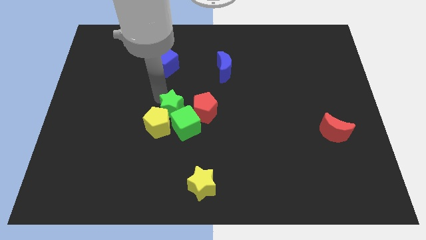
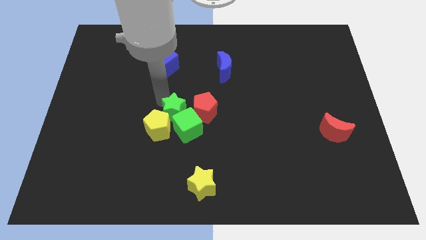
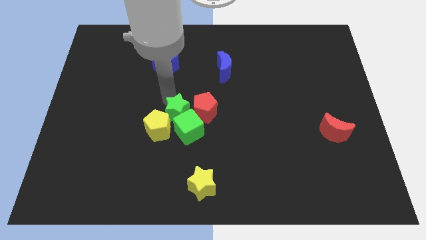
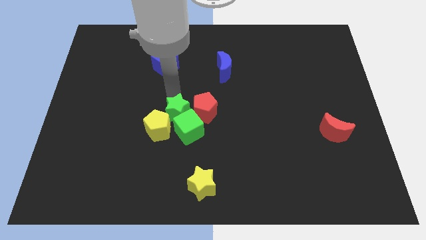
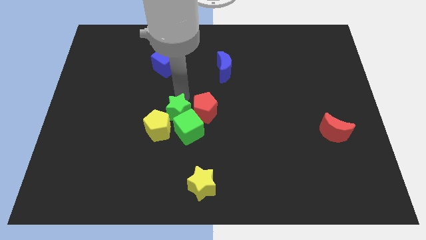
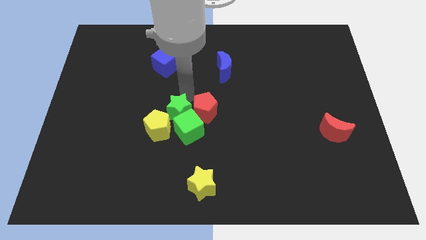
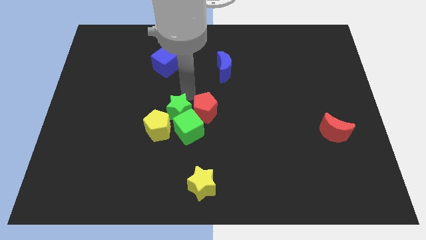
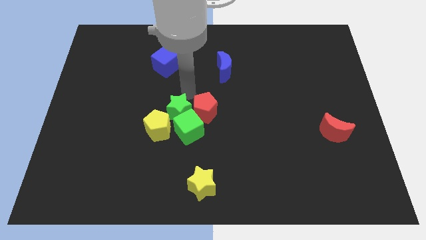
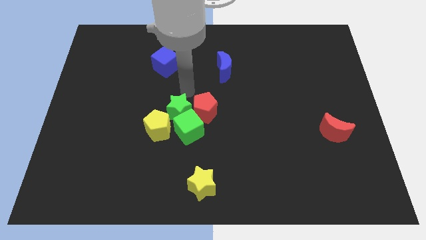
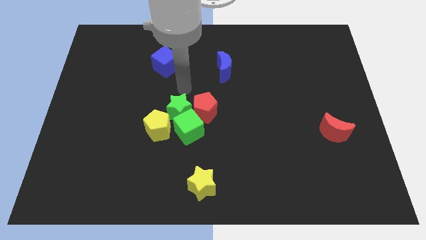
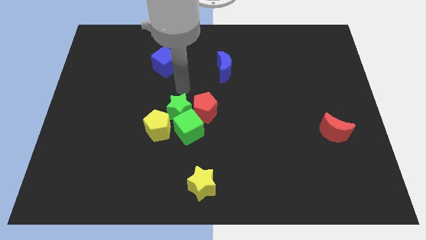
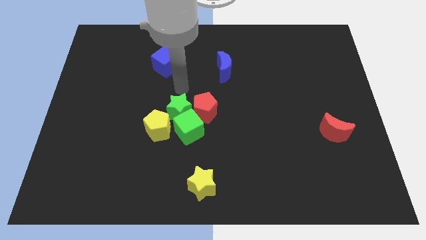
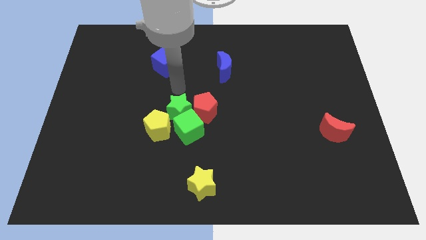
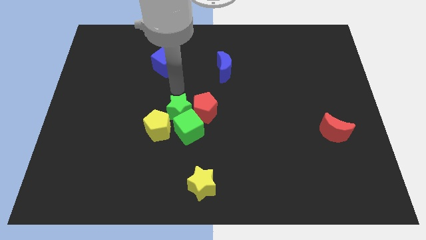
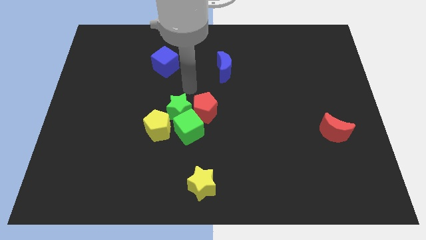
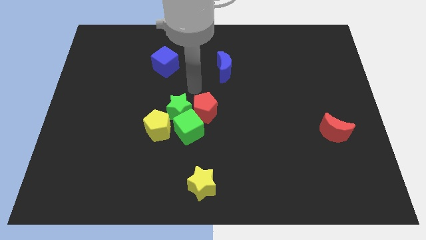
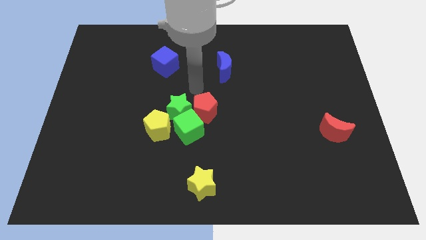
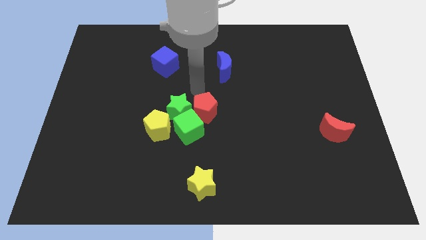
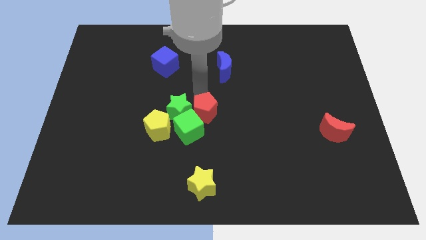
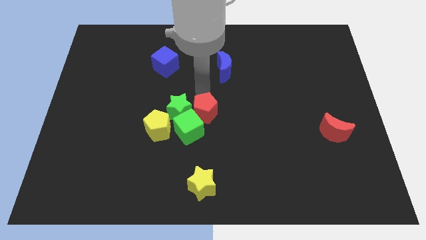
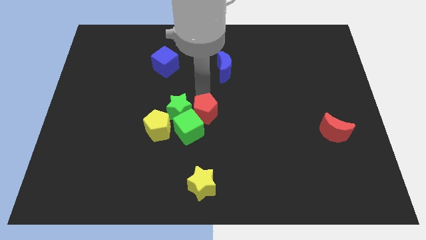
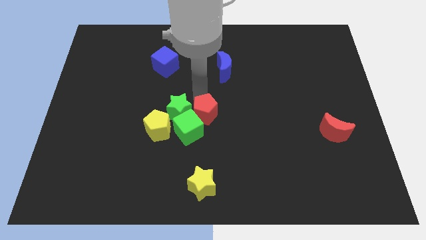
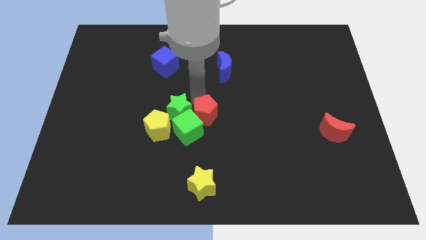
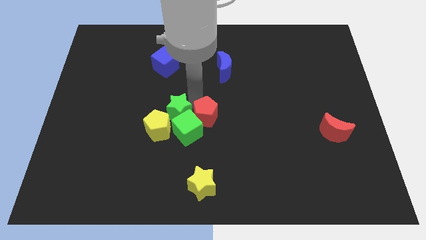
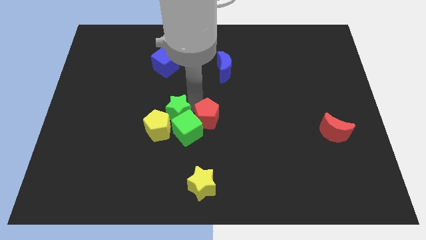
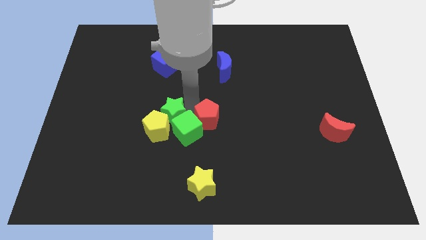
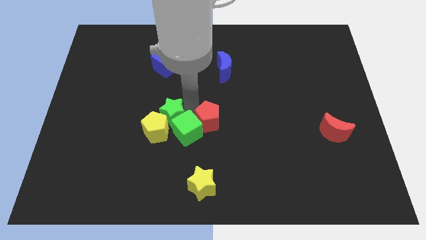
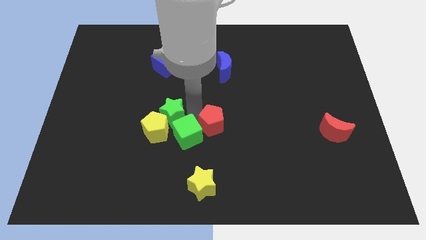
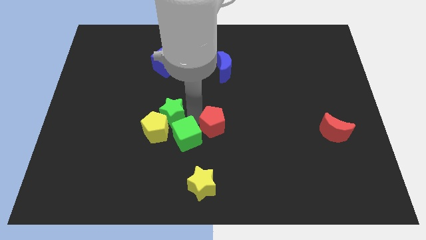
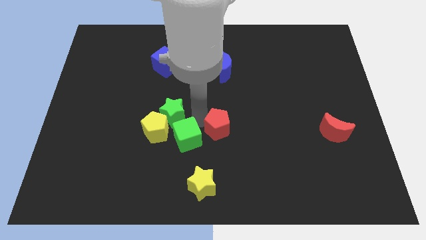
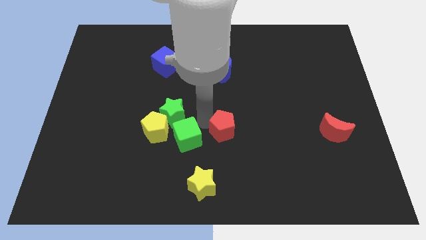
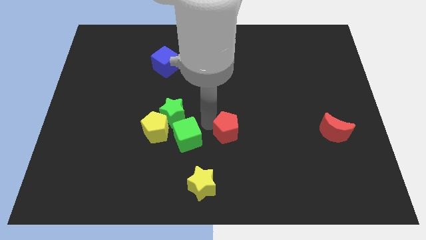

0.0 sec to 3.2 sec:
place your arm above the red pentagon

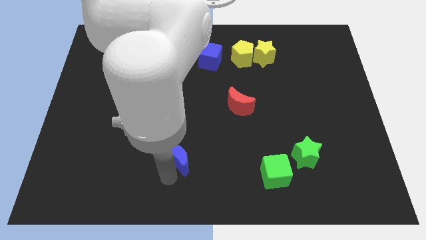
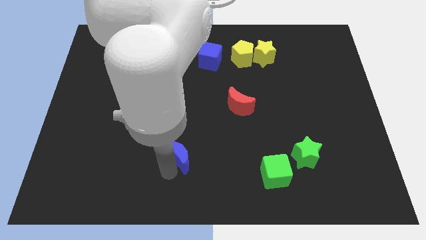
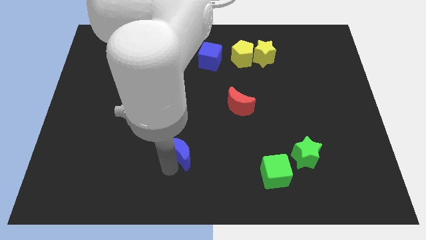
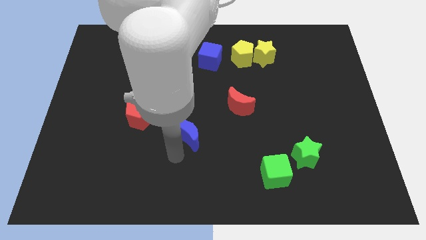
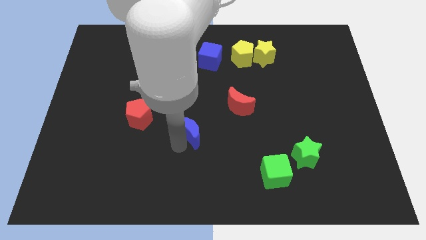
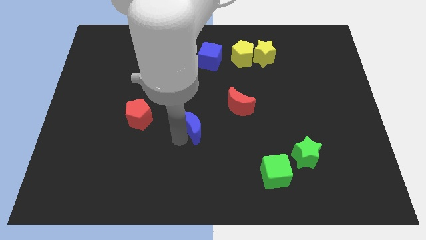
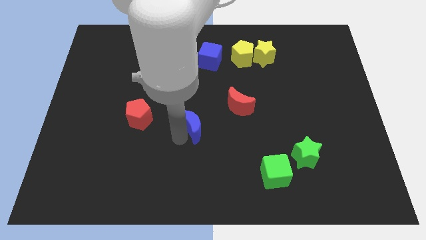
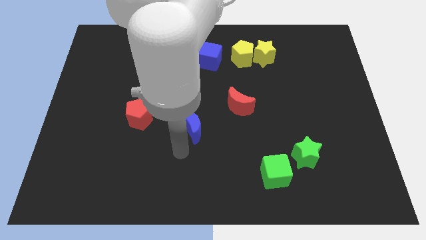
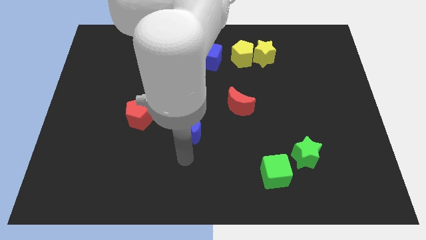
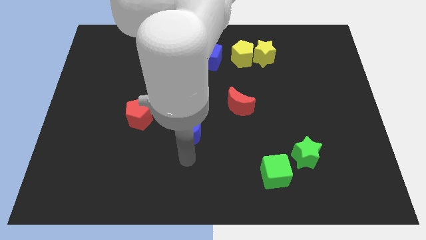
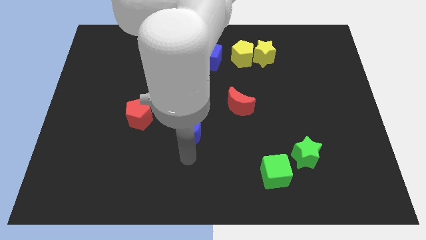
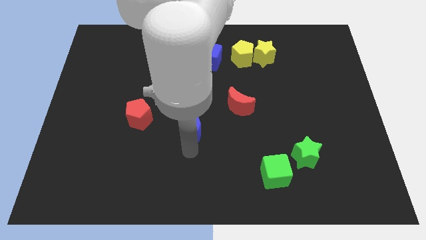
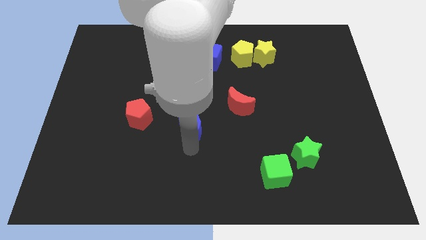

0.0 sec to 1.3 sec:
push the blue moon up slightly

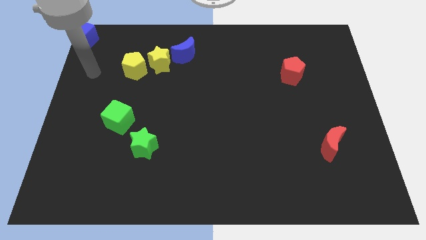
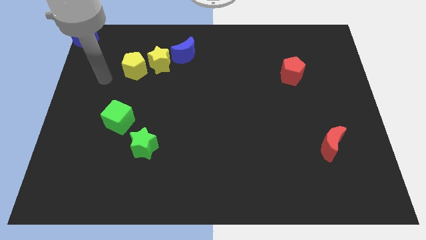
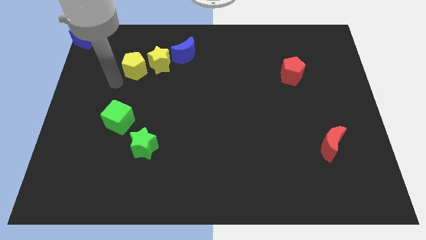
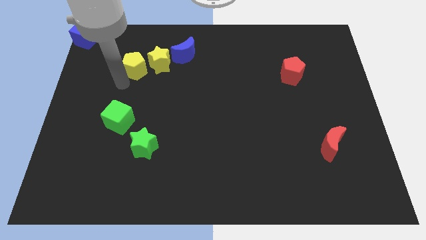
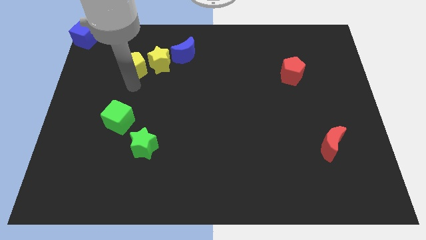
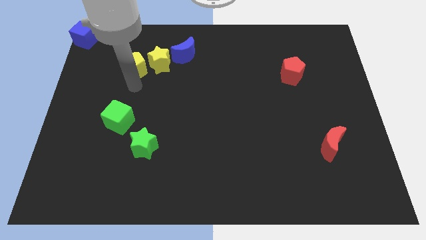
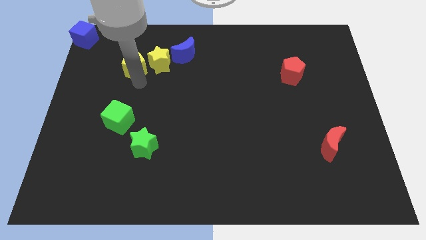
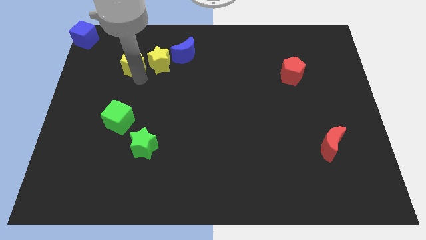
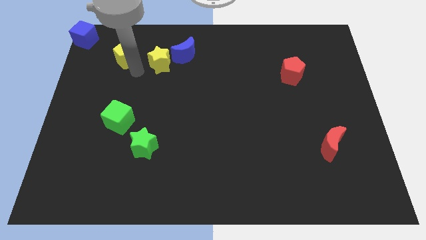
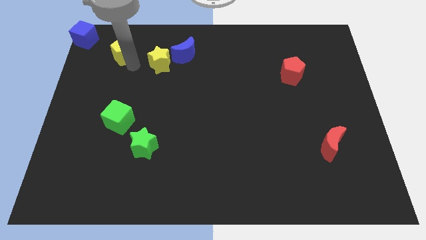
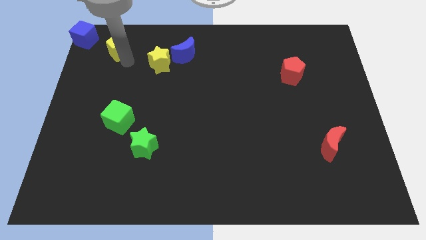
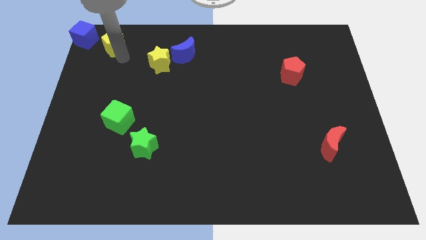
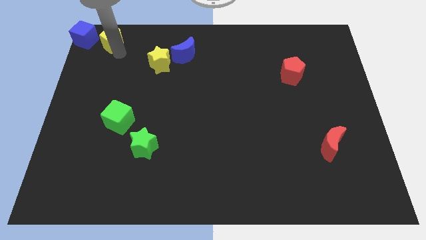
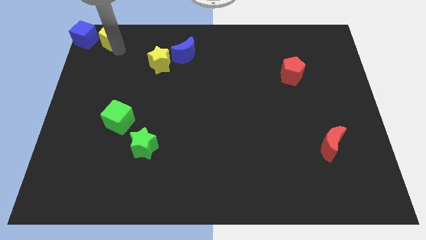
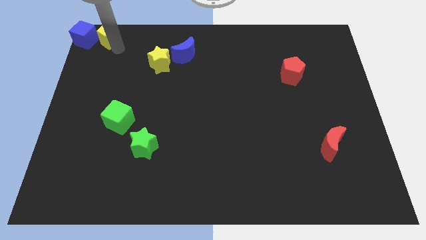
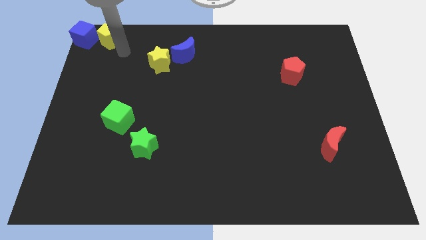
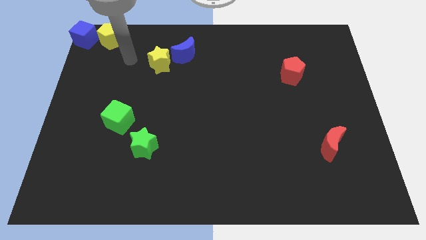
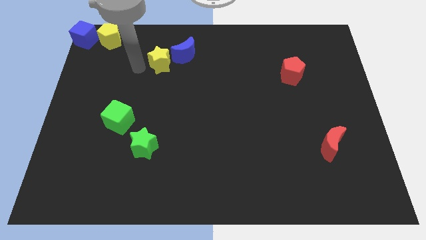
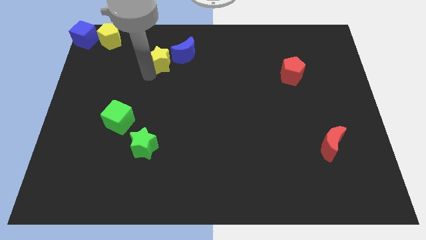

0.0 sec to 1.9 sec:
move the yellow pentagon to the right of blue cube

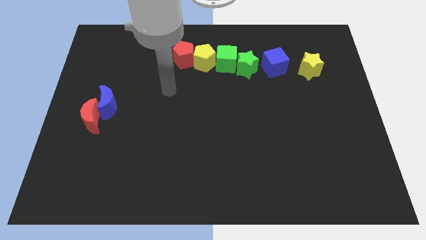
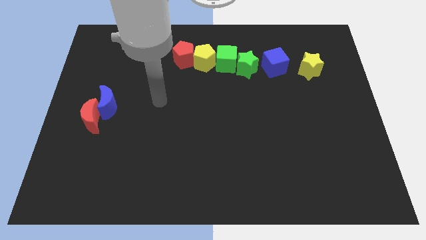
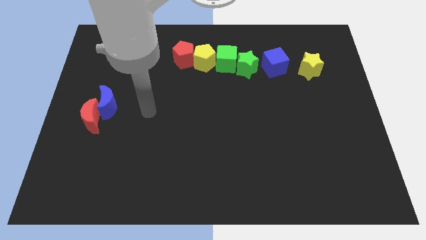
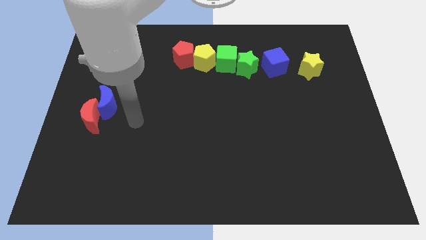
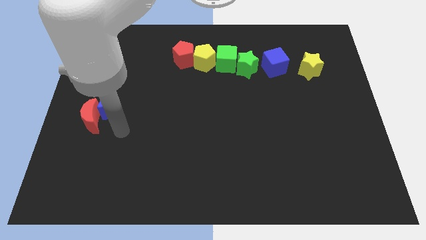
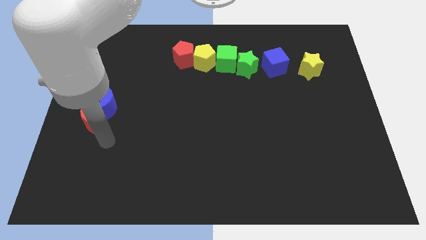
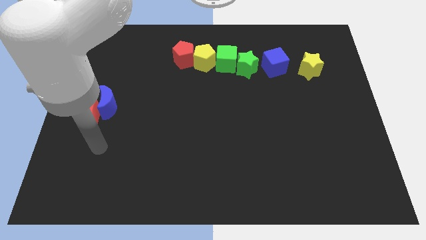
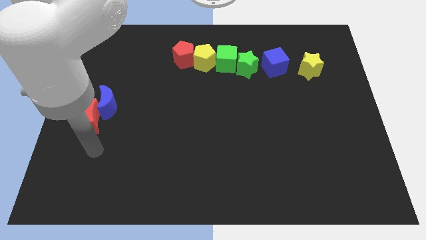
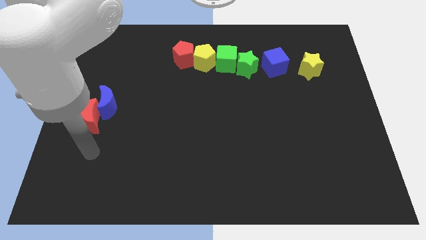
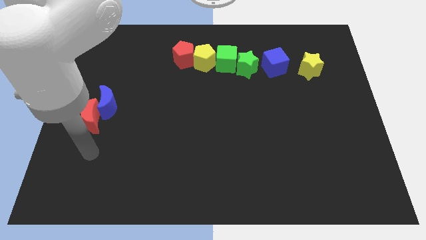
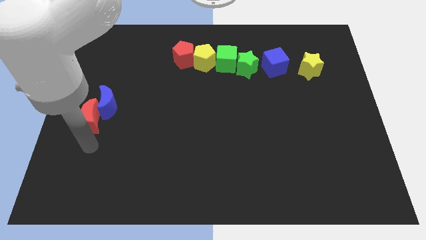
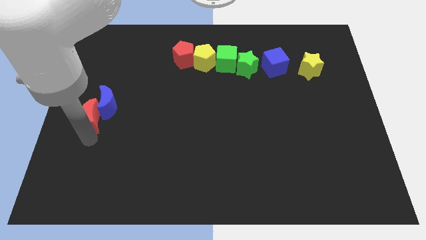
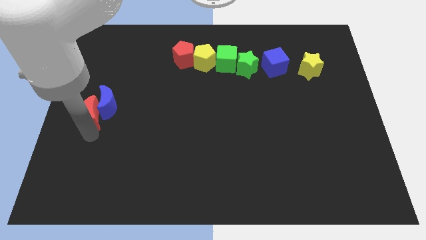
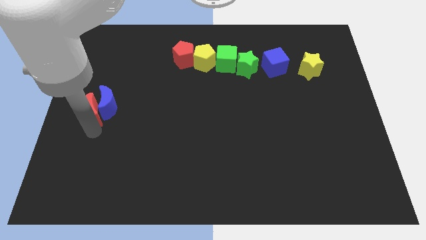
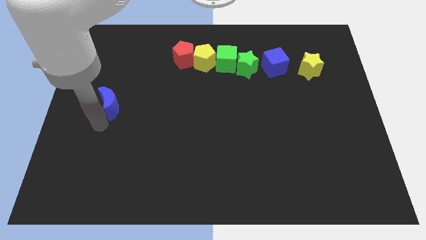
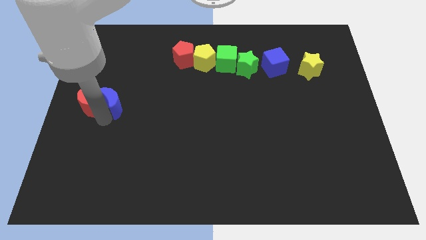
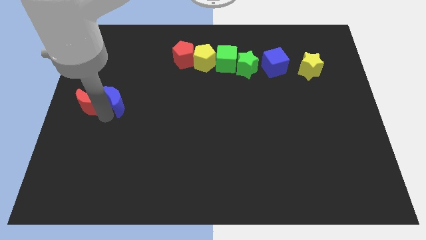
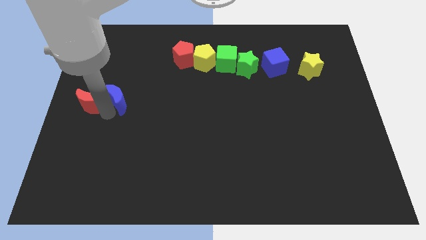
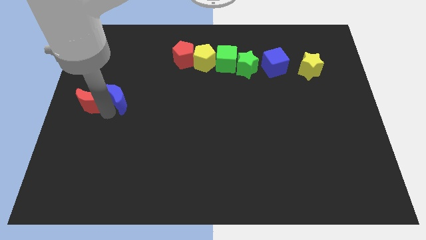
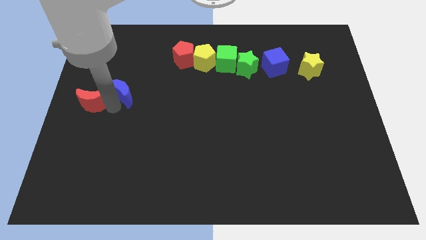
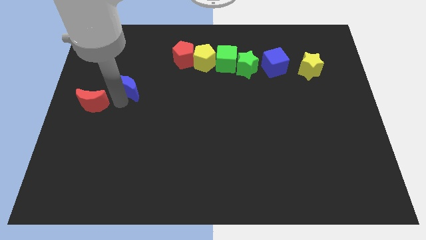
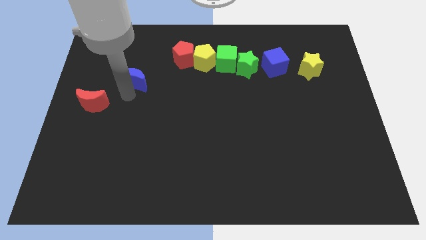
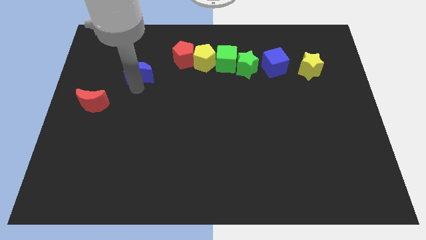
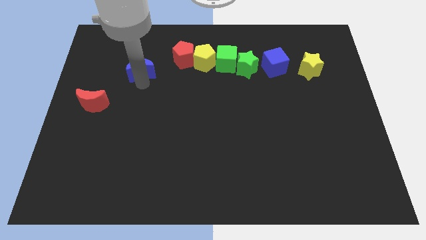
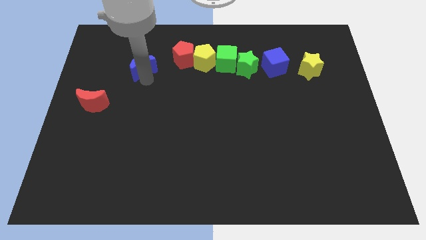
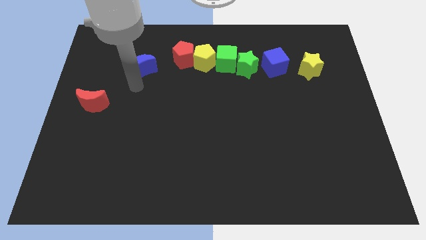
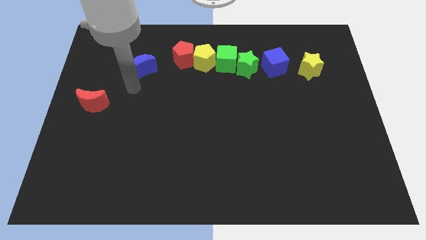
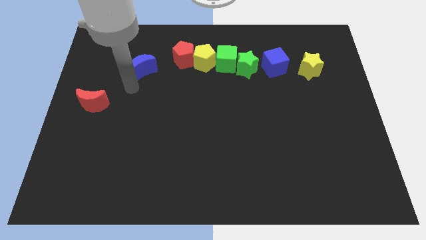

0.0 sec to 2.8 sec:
place the blue left of red pentagon
